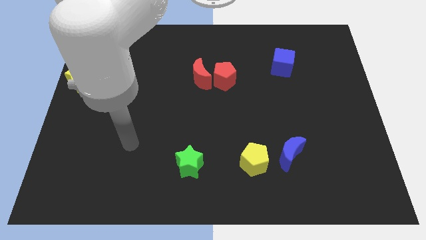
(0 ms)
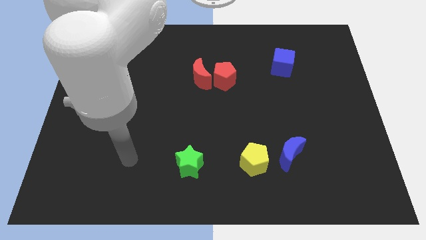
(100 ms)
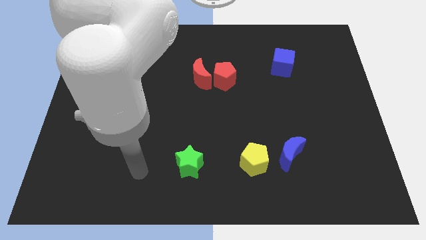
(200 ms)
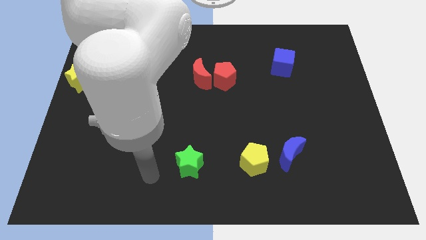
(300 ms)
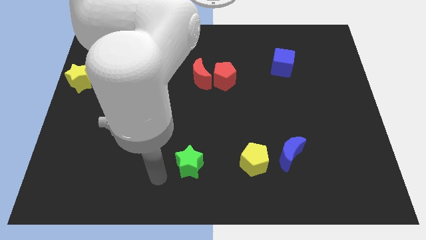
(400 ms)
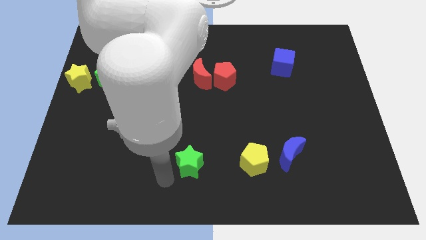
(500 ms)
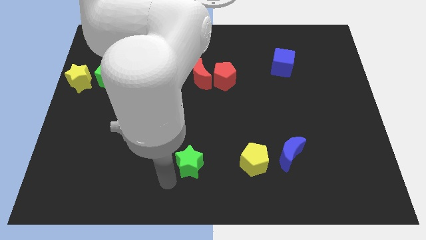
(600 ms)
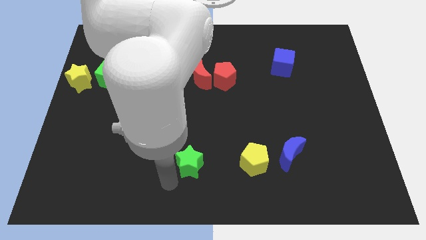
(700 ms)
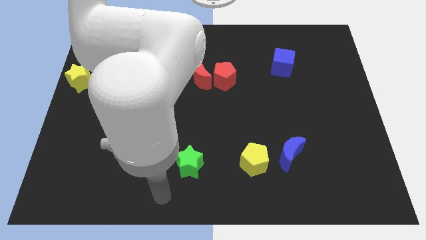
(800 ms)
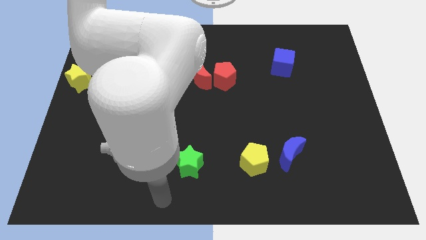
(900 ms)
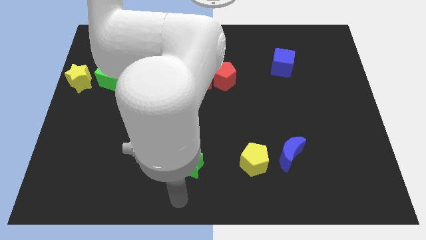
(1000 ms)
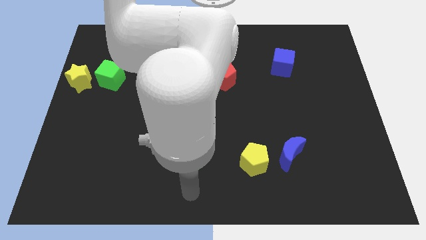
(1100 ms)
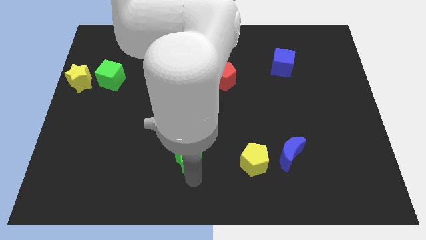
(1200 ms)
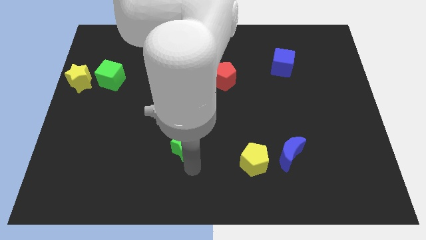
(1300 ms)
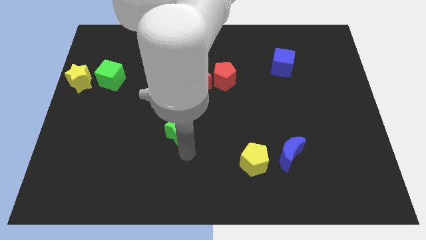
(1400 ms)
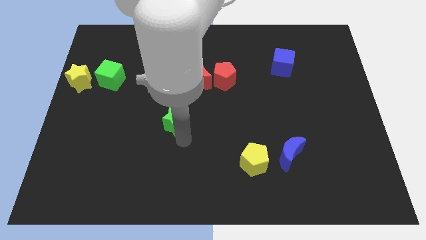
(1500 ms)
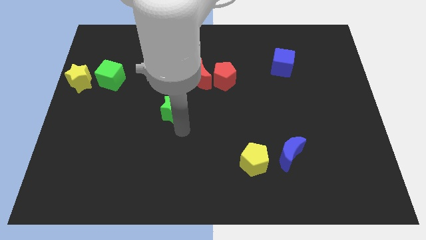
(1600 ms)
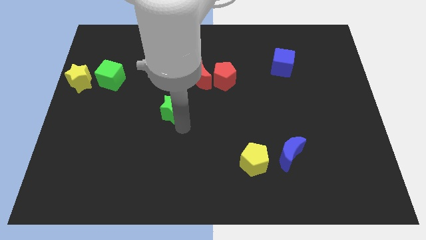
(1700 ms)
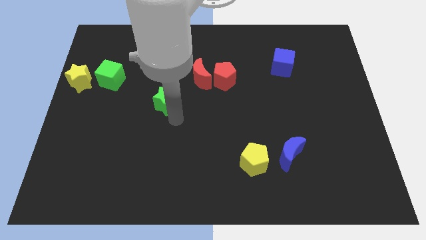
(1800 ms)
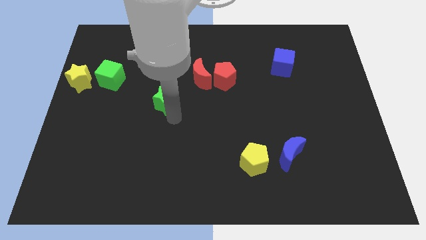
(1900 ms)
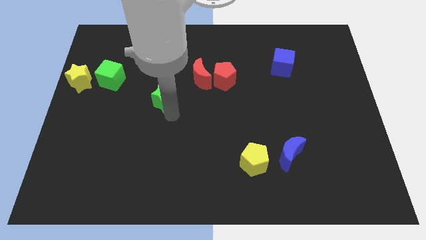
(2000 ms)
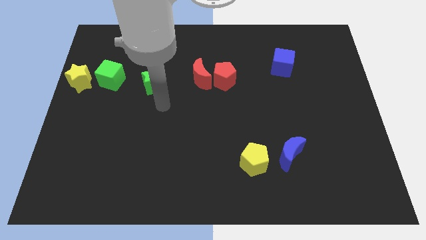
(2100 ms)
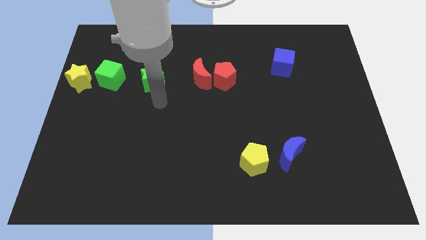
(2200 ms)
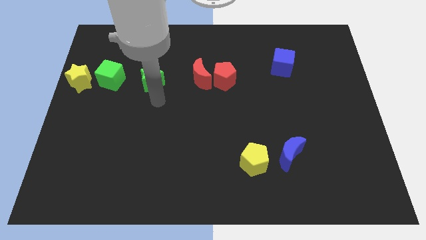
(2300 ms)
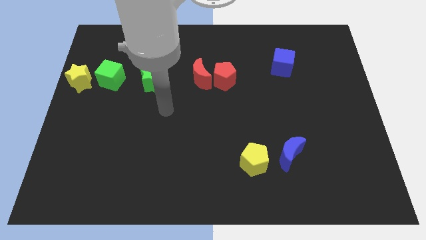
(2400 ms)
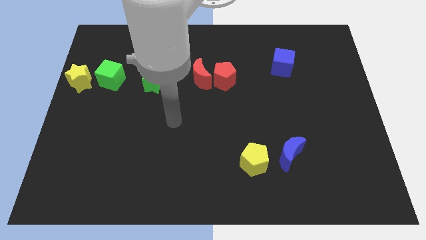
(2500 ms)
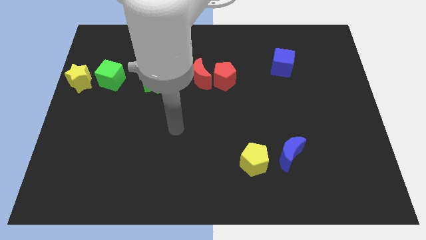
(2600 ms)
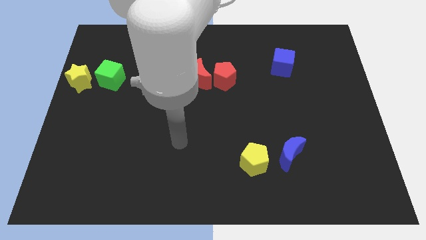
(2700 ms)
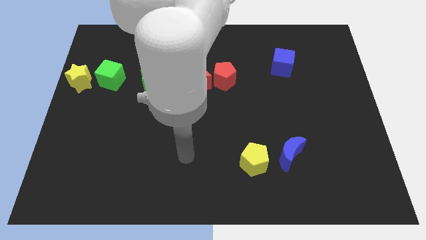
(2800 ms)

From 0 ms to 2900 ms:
place the green star in between red crescent and green cube

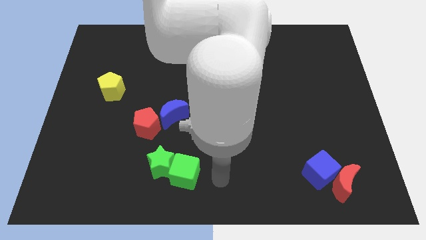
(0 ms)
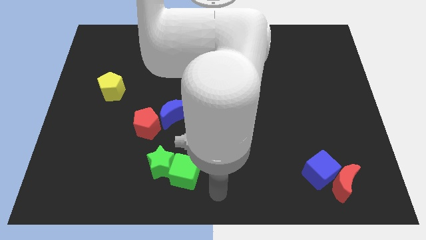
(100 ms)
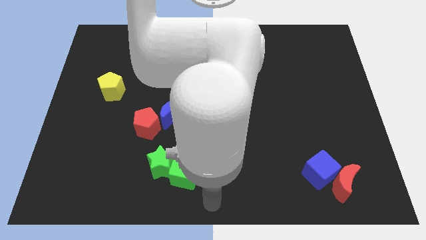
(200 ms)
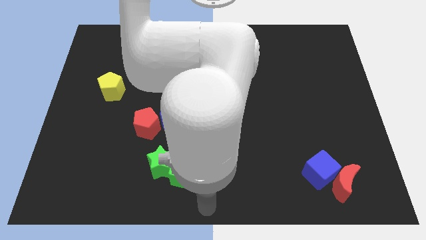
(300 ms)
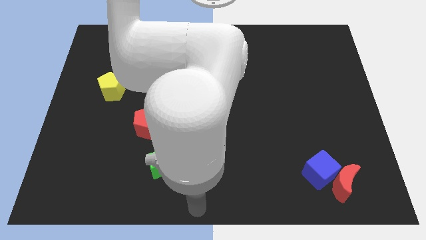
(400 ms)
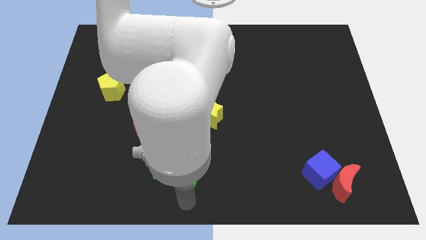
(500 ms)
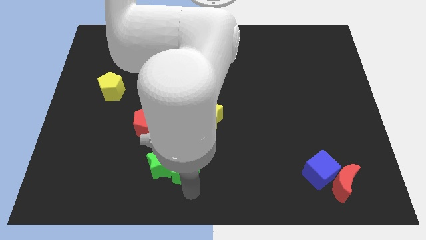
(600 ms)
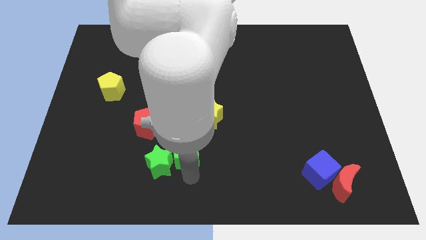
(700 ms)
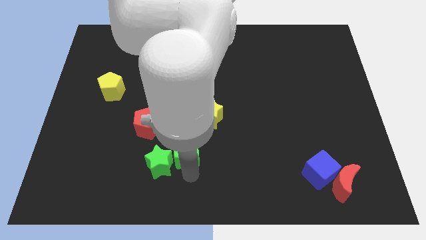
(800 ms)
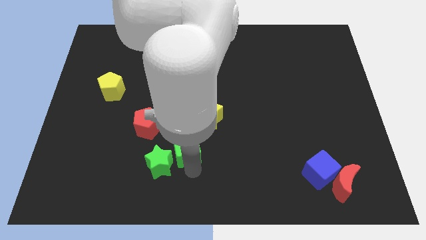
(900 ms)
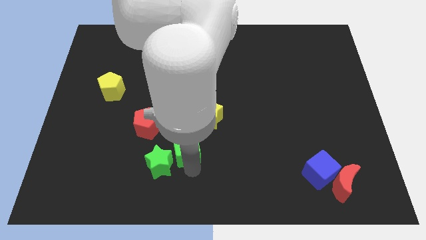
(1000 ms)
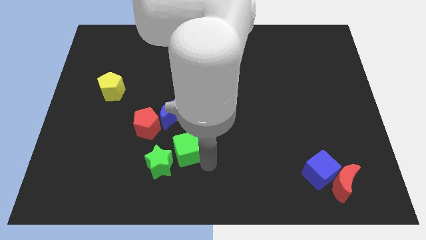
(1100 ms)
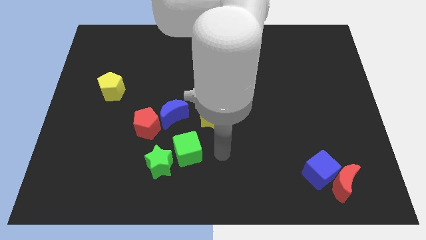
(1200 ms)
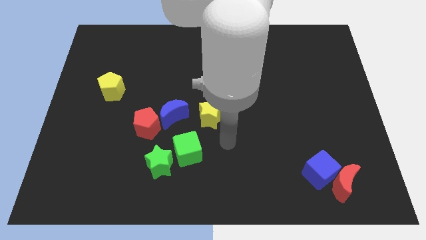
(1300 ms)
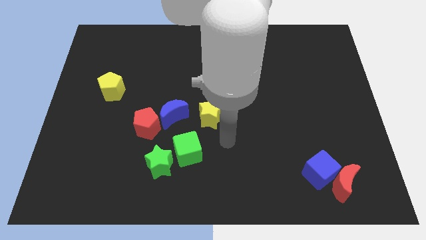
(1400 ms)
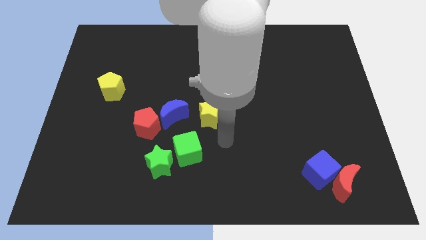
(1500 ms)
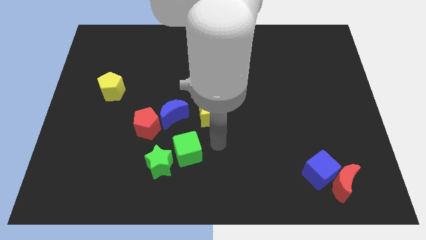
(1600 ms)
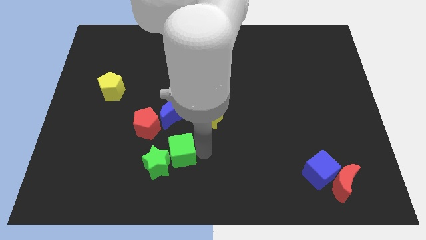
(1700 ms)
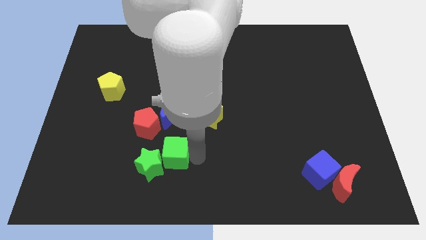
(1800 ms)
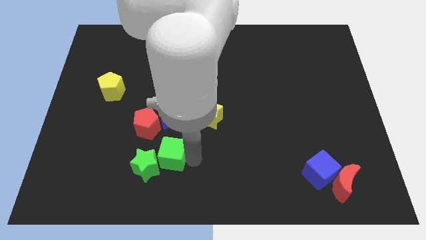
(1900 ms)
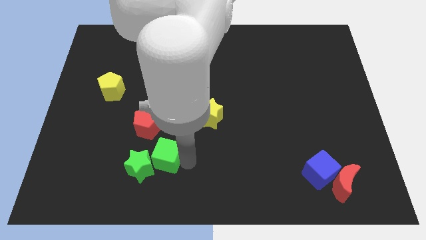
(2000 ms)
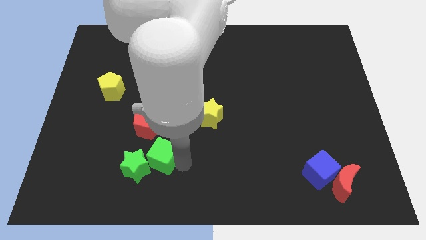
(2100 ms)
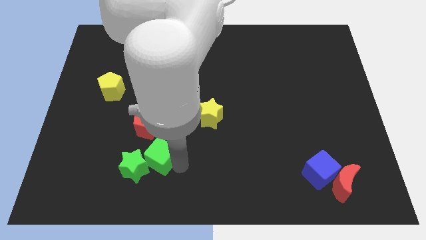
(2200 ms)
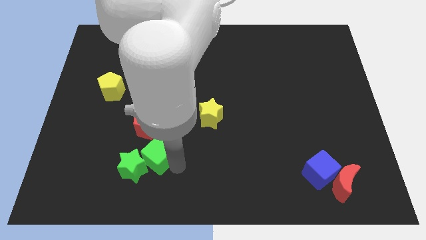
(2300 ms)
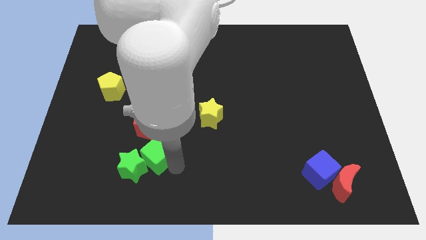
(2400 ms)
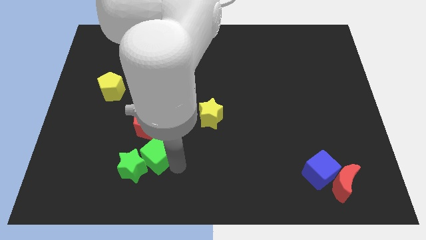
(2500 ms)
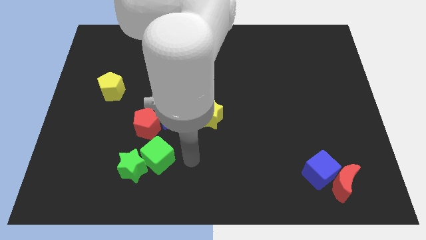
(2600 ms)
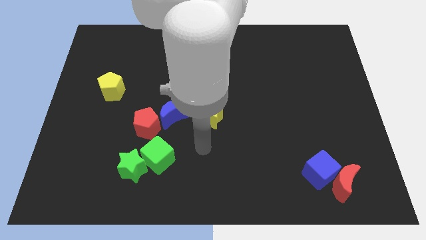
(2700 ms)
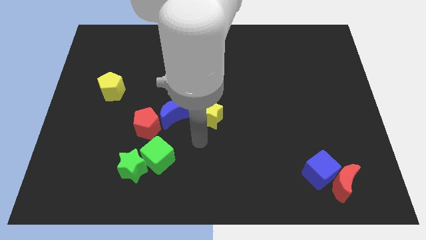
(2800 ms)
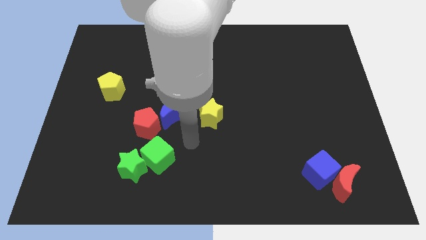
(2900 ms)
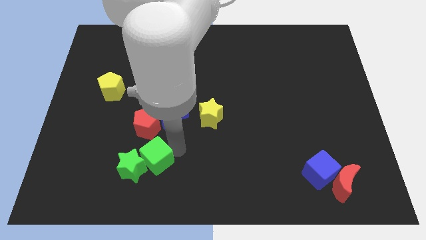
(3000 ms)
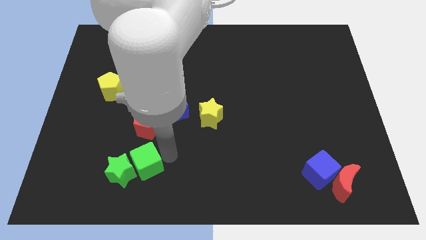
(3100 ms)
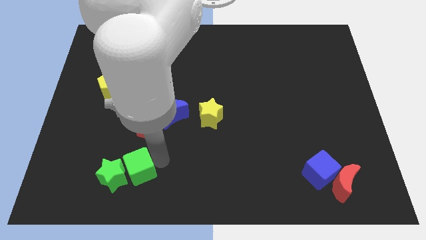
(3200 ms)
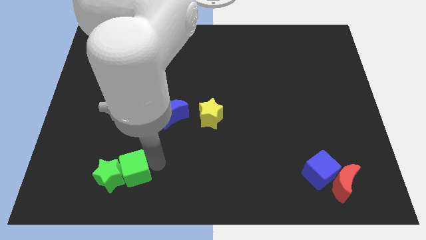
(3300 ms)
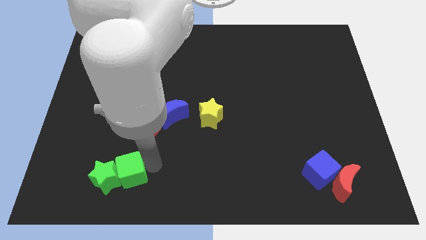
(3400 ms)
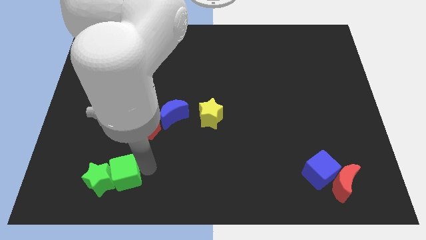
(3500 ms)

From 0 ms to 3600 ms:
slide the greens star and green cube towards the bottom left side of the board

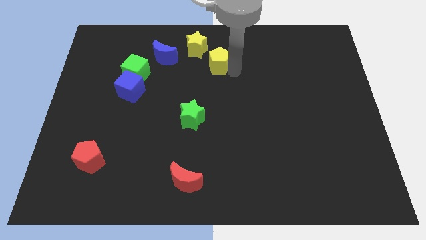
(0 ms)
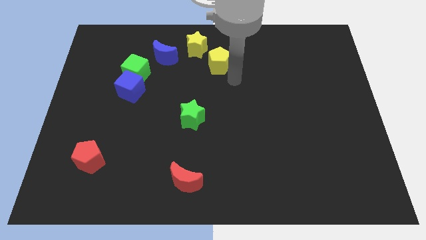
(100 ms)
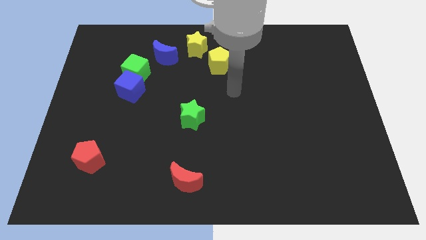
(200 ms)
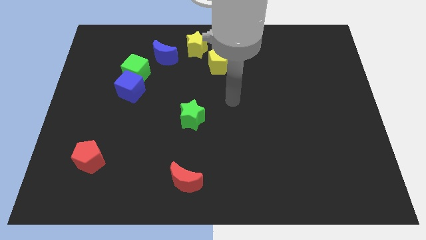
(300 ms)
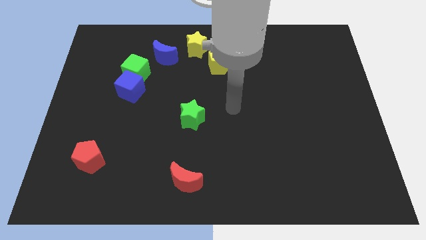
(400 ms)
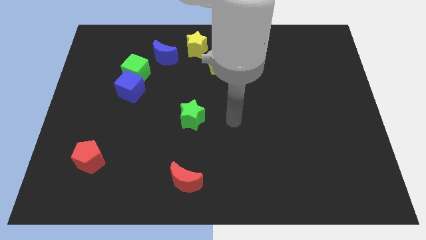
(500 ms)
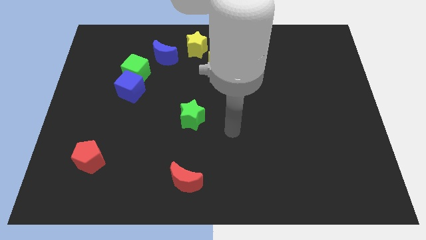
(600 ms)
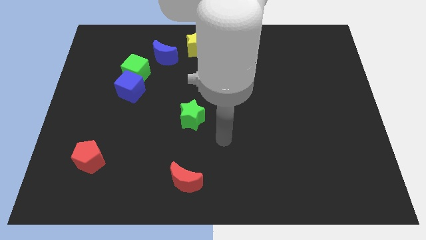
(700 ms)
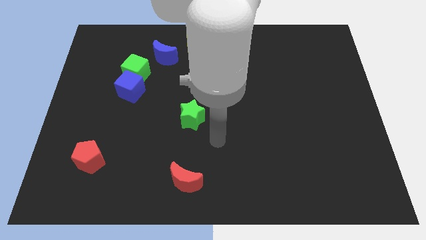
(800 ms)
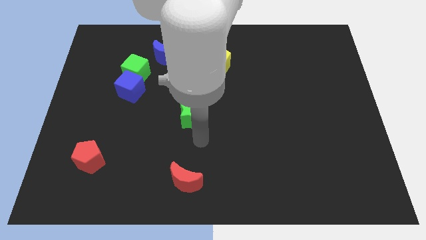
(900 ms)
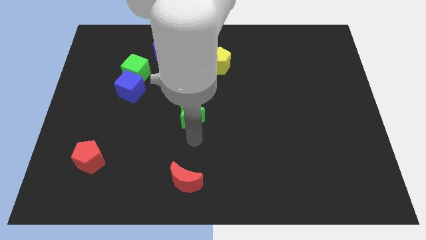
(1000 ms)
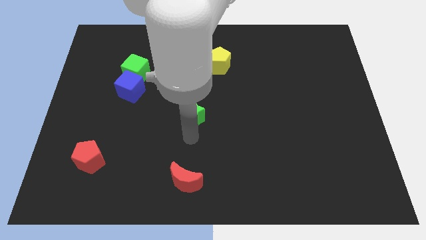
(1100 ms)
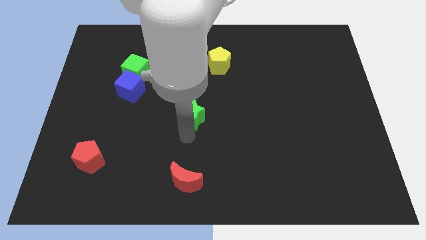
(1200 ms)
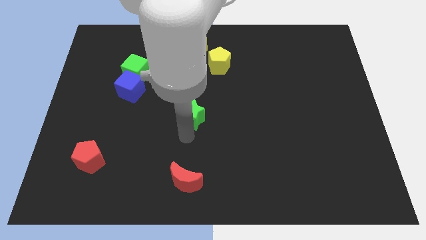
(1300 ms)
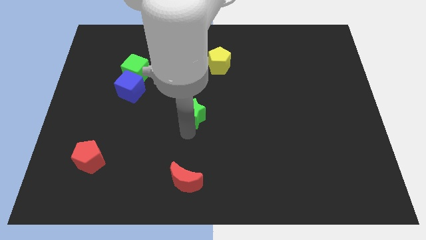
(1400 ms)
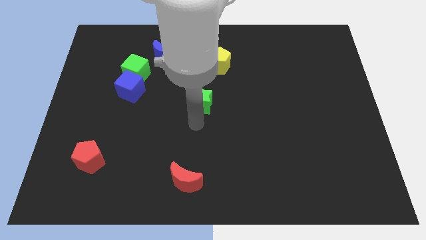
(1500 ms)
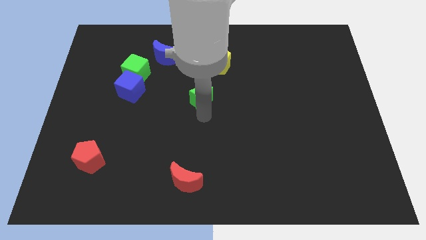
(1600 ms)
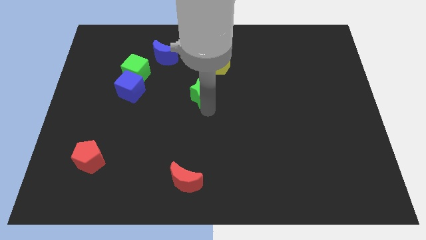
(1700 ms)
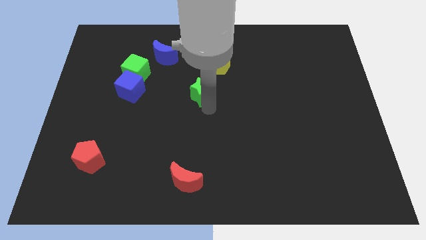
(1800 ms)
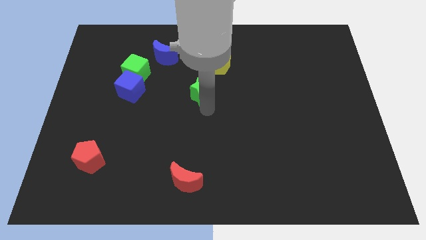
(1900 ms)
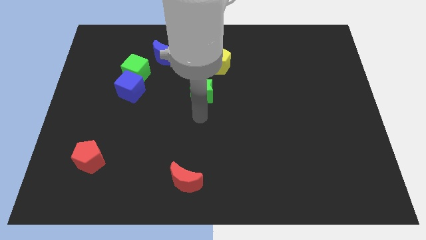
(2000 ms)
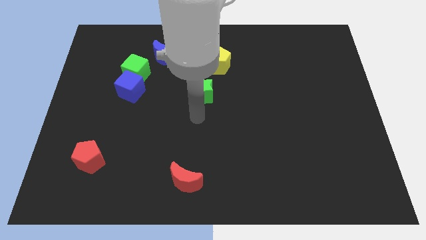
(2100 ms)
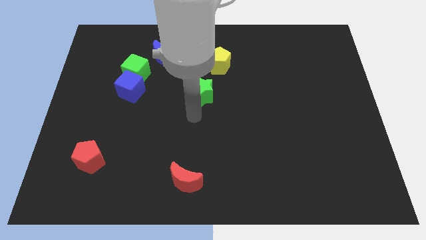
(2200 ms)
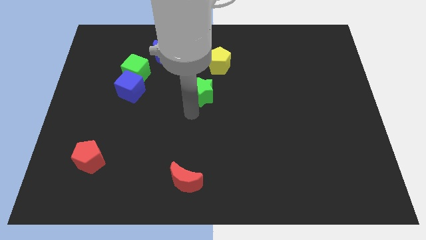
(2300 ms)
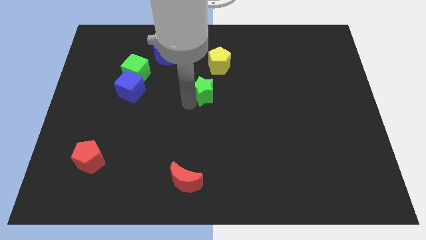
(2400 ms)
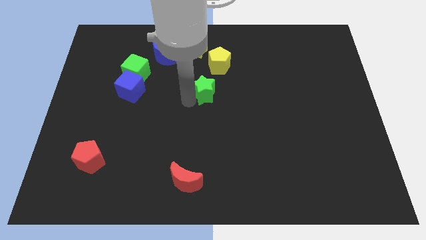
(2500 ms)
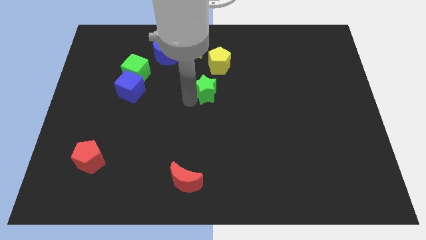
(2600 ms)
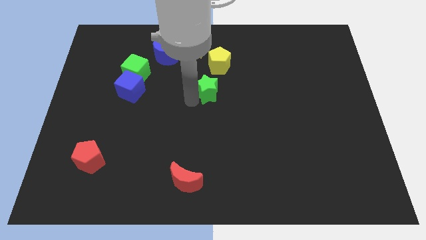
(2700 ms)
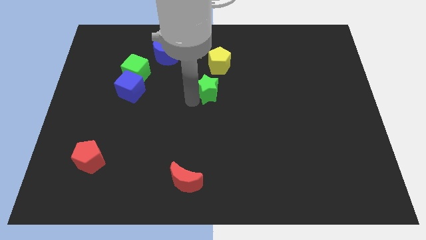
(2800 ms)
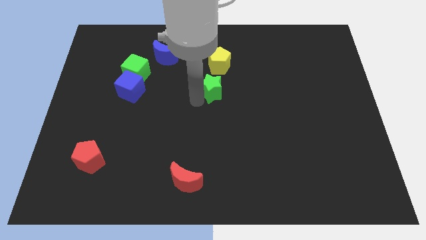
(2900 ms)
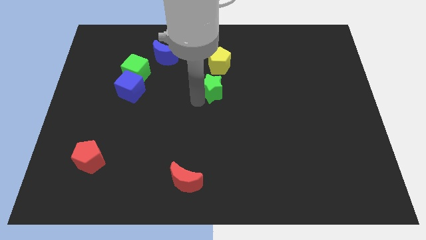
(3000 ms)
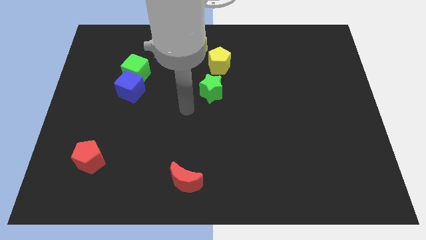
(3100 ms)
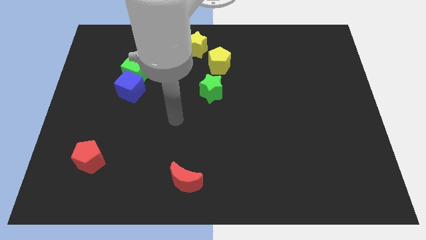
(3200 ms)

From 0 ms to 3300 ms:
push the green star to the bottom side of the yellow pentagon
